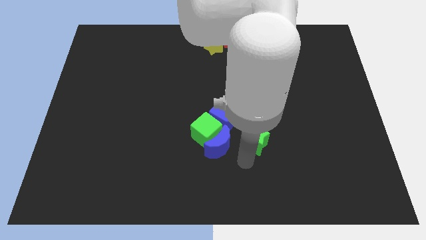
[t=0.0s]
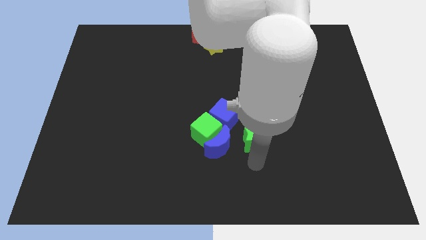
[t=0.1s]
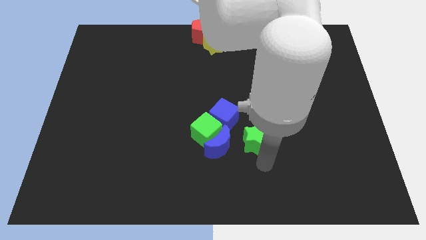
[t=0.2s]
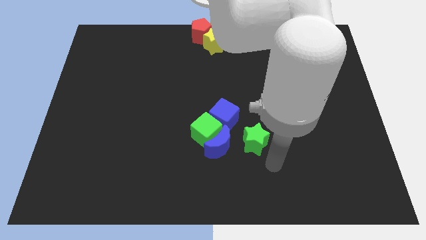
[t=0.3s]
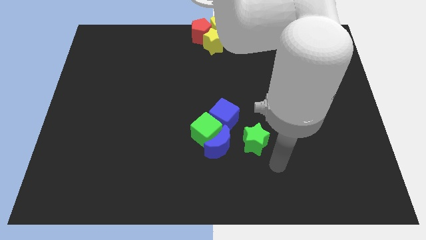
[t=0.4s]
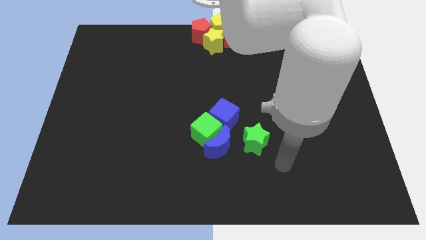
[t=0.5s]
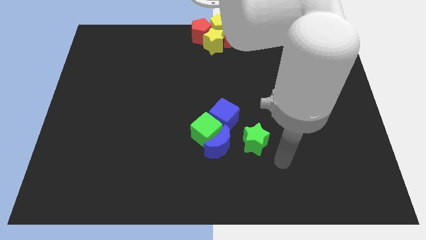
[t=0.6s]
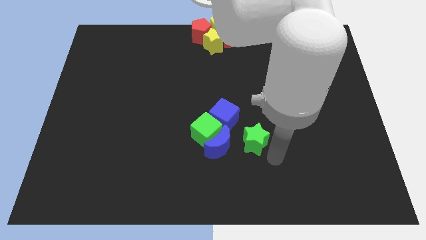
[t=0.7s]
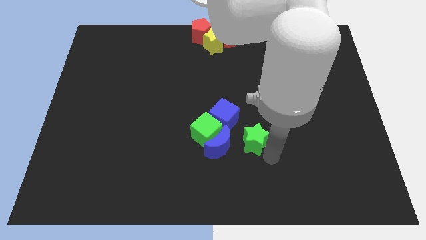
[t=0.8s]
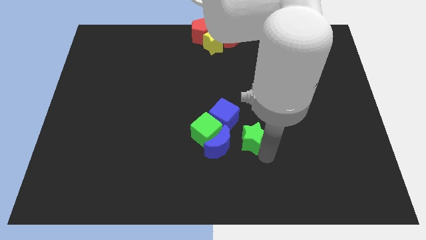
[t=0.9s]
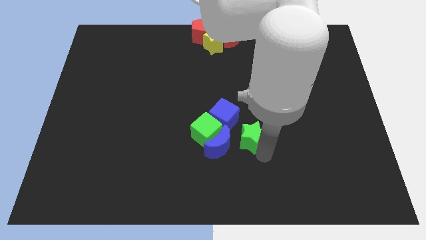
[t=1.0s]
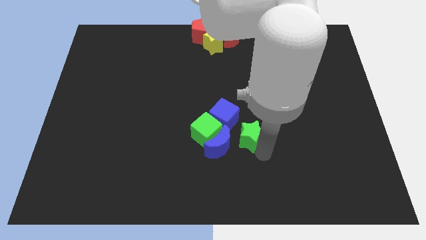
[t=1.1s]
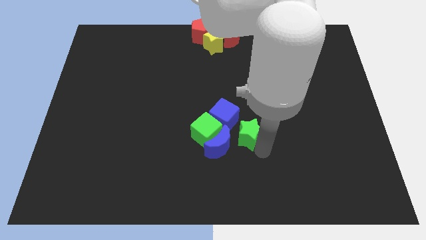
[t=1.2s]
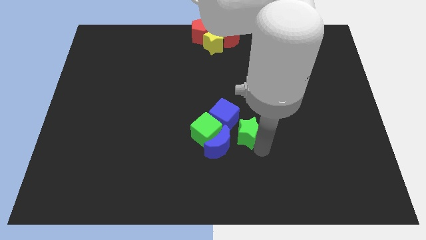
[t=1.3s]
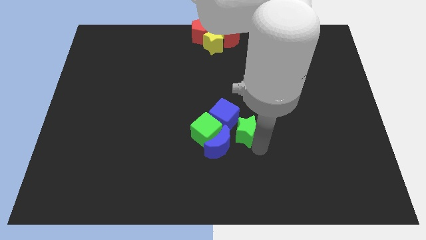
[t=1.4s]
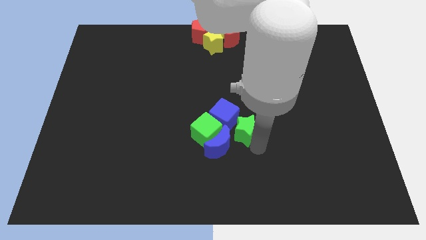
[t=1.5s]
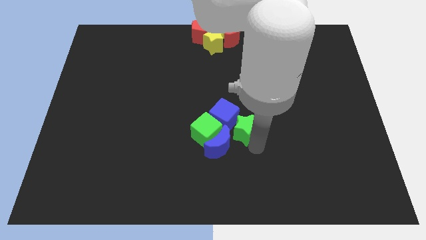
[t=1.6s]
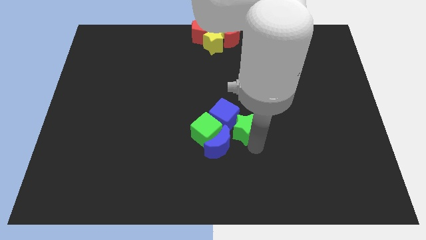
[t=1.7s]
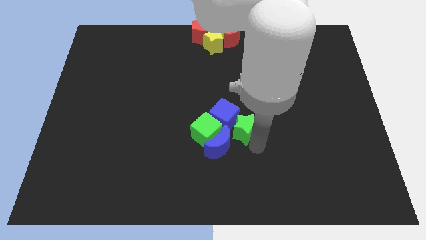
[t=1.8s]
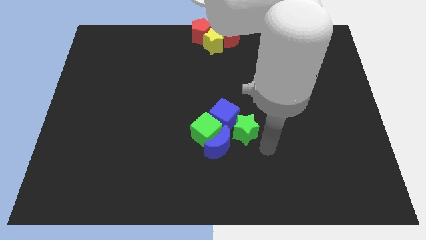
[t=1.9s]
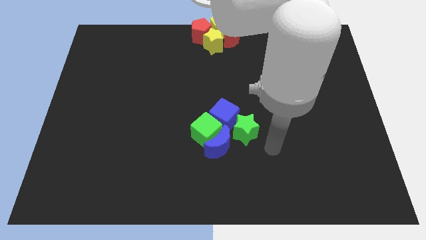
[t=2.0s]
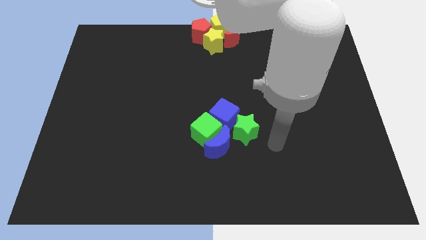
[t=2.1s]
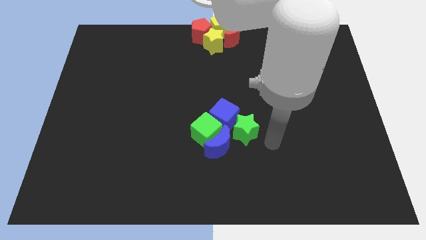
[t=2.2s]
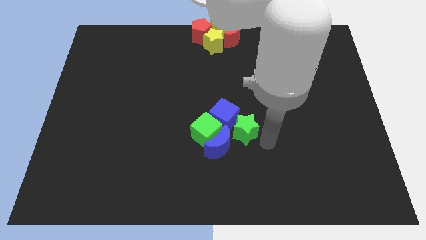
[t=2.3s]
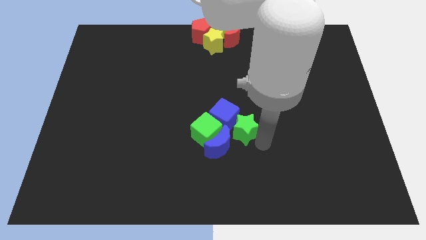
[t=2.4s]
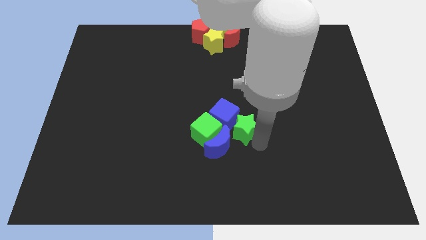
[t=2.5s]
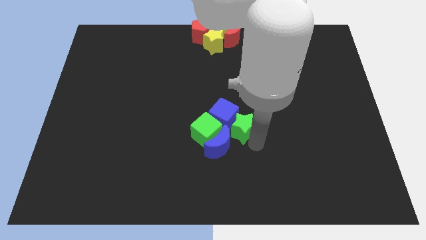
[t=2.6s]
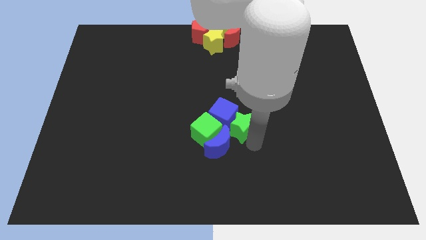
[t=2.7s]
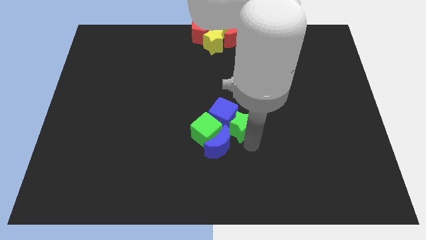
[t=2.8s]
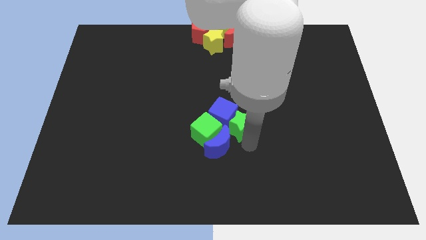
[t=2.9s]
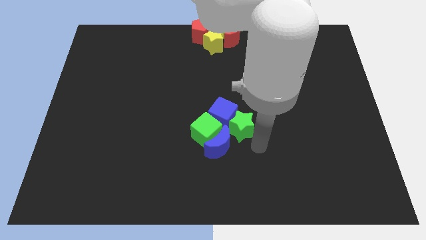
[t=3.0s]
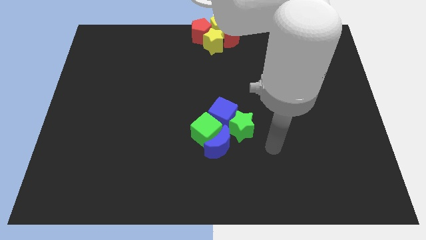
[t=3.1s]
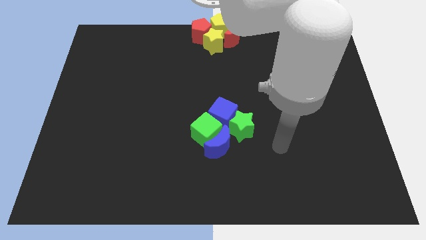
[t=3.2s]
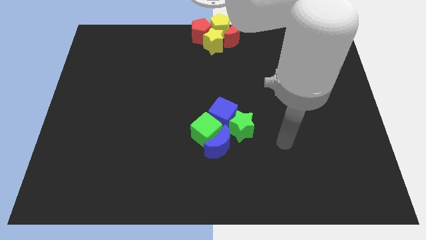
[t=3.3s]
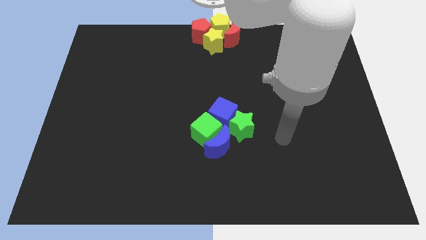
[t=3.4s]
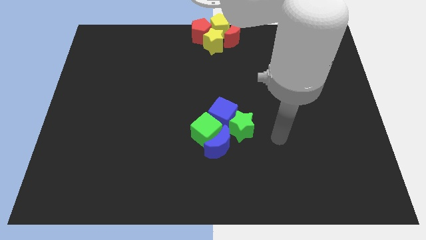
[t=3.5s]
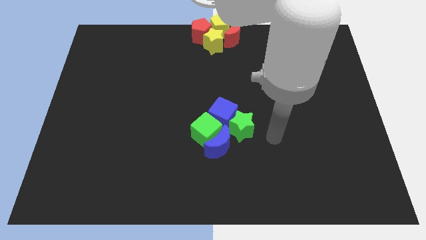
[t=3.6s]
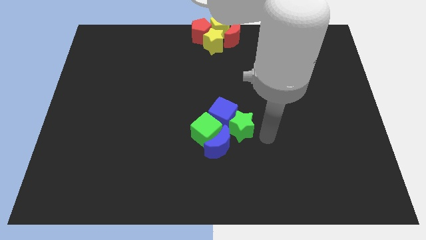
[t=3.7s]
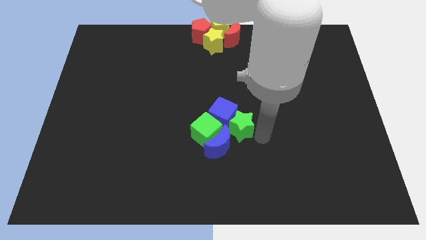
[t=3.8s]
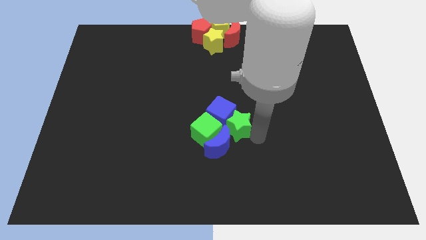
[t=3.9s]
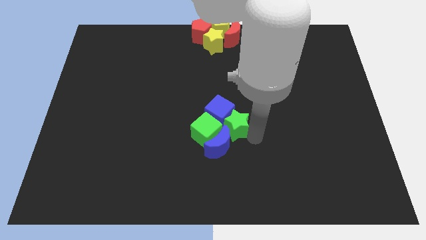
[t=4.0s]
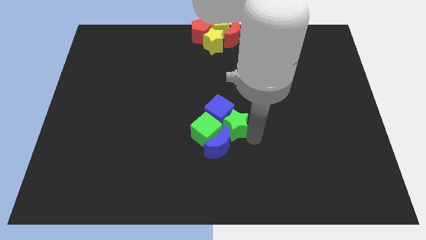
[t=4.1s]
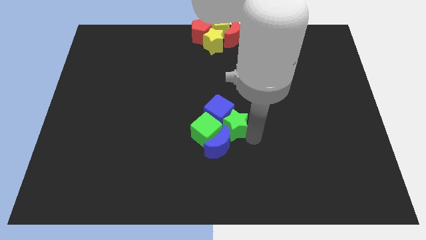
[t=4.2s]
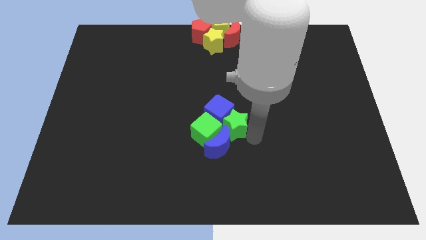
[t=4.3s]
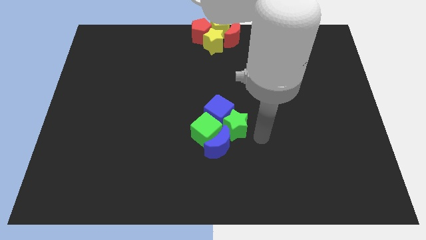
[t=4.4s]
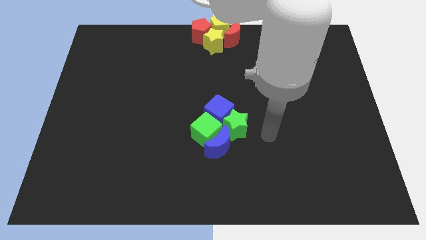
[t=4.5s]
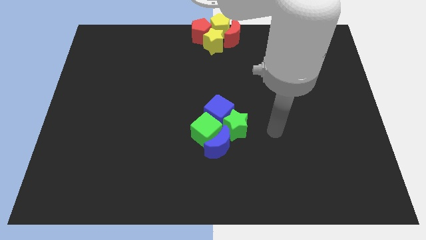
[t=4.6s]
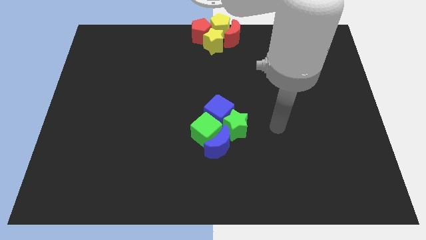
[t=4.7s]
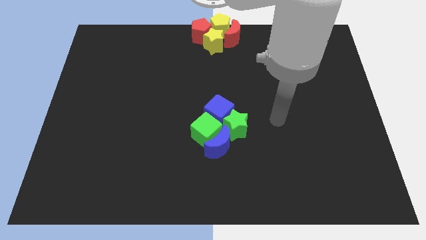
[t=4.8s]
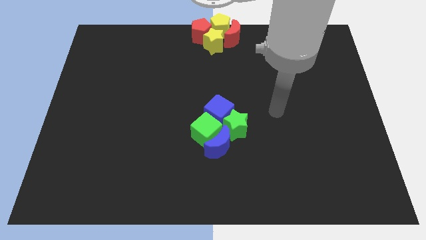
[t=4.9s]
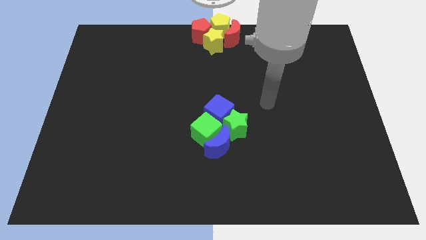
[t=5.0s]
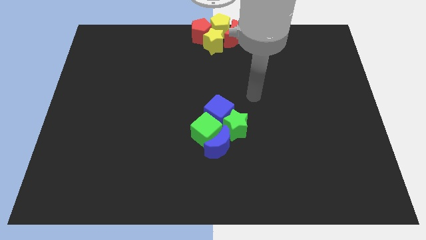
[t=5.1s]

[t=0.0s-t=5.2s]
push the green star into the blue cube

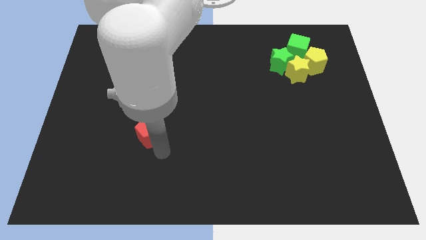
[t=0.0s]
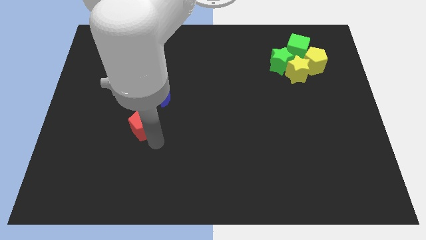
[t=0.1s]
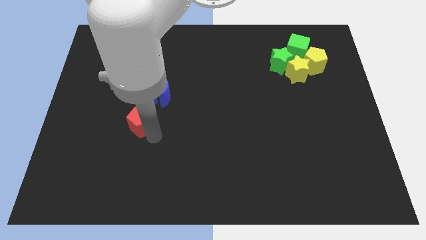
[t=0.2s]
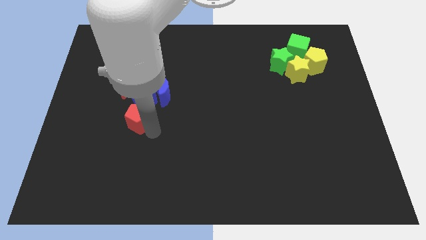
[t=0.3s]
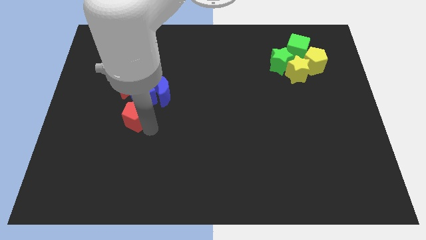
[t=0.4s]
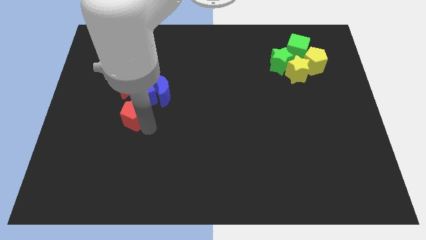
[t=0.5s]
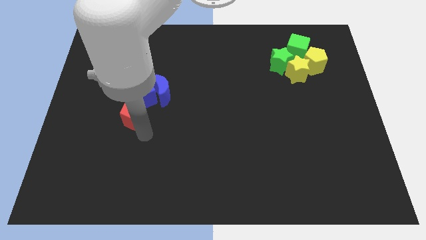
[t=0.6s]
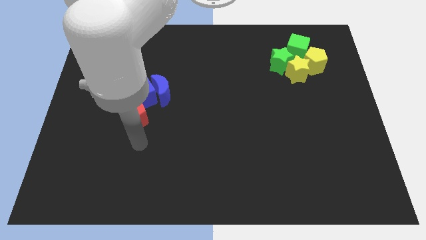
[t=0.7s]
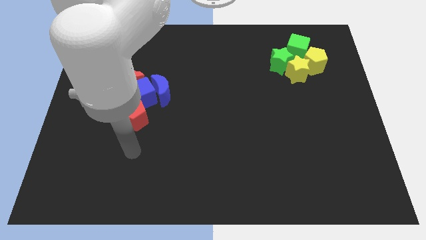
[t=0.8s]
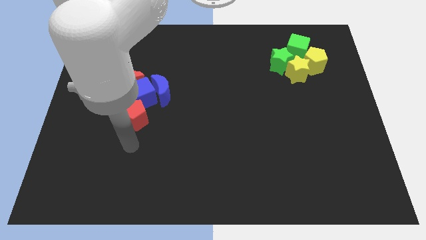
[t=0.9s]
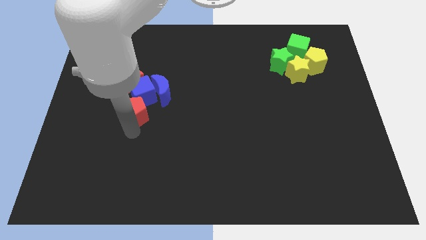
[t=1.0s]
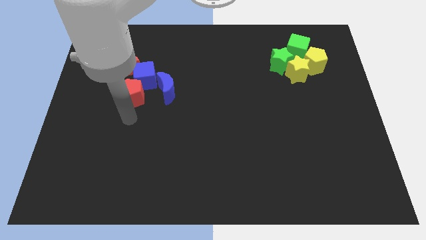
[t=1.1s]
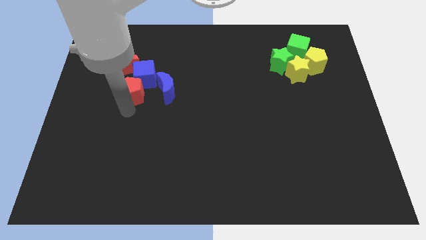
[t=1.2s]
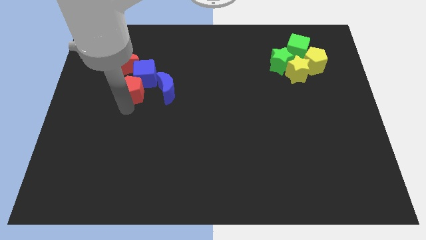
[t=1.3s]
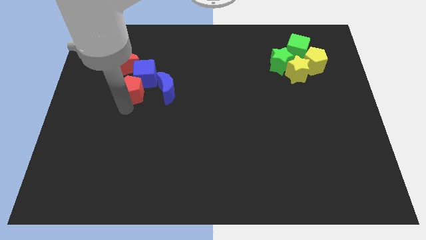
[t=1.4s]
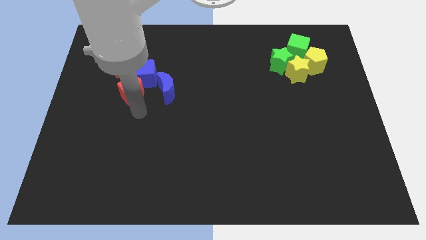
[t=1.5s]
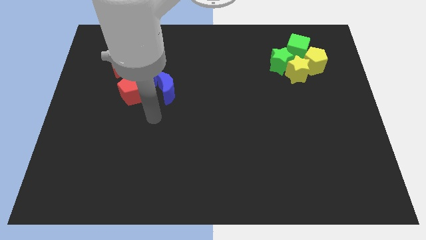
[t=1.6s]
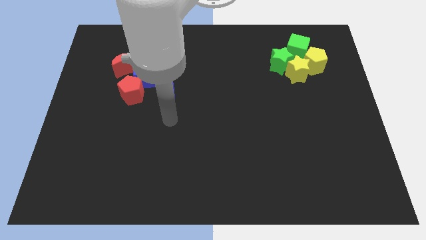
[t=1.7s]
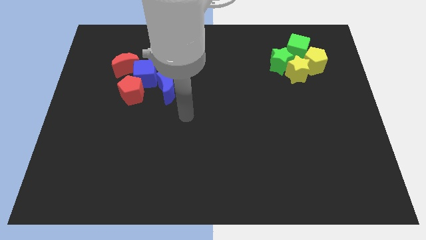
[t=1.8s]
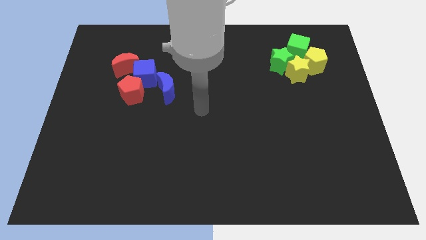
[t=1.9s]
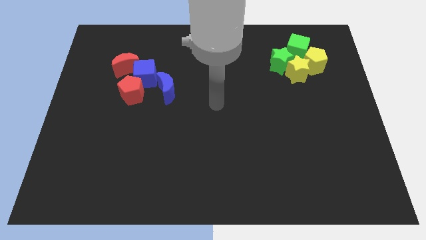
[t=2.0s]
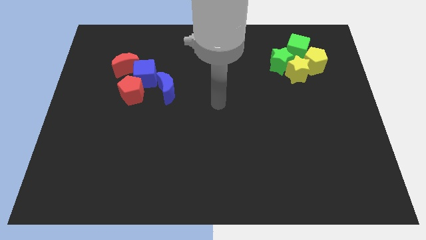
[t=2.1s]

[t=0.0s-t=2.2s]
push the red pentagon into the blue cube

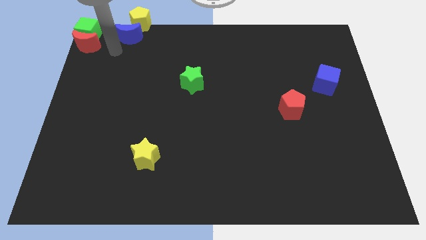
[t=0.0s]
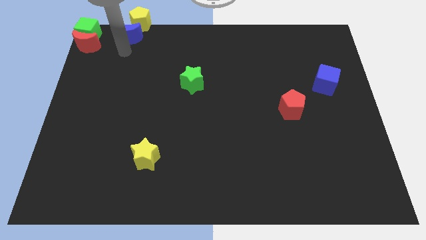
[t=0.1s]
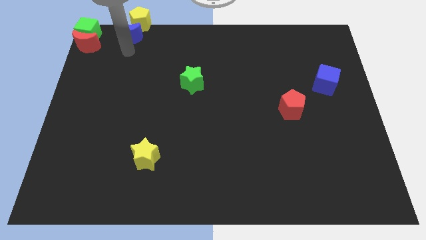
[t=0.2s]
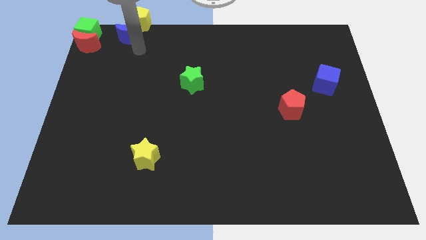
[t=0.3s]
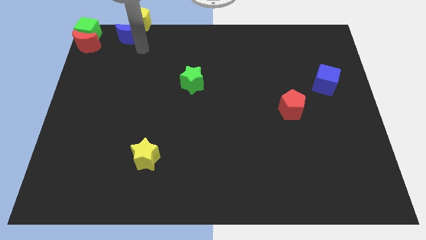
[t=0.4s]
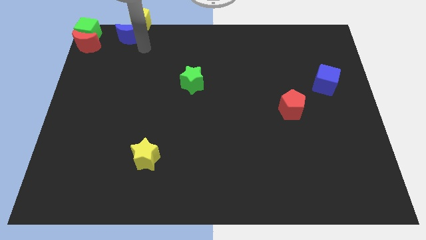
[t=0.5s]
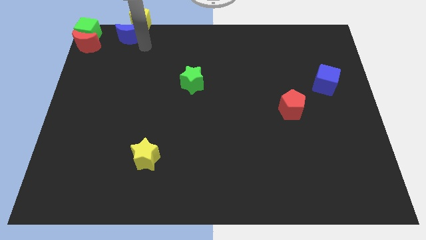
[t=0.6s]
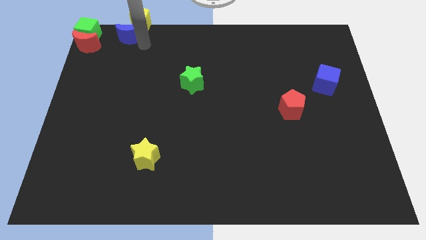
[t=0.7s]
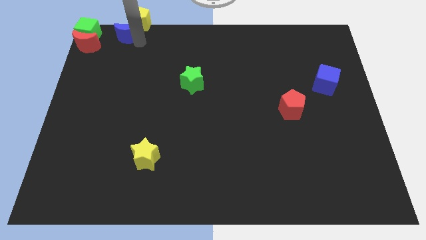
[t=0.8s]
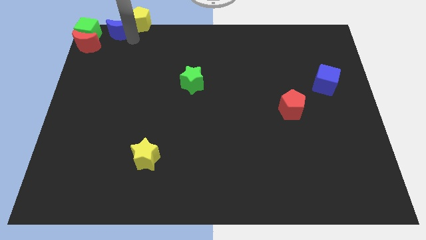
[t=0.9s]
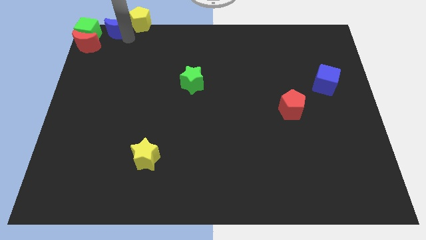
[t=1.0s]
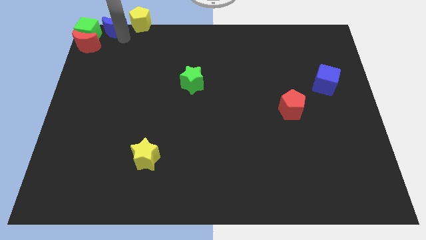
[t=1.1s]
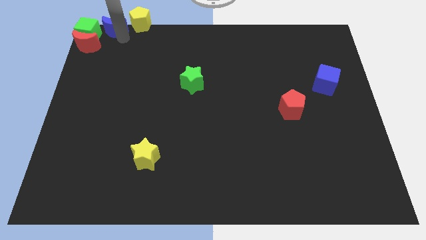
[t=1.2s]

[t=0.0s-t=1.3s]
place the blue moon between the yellow pentagon and green cube
